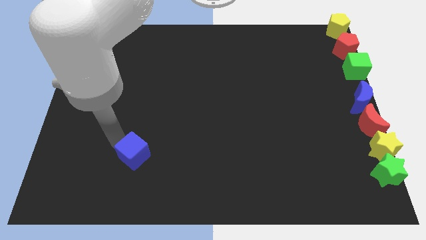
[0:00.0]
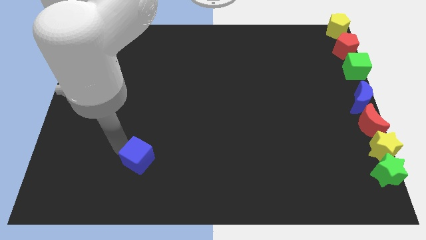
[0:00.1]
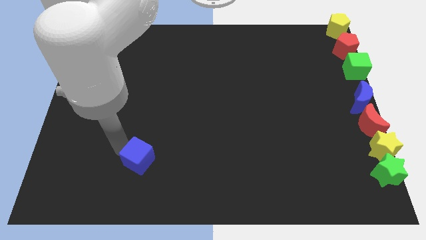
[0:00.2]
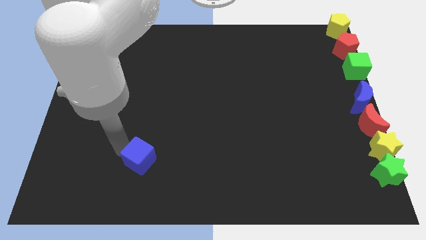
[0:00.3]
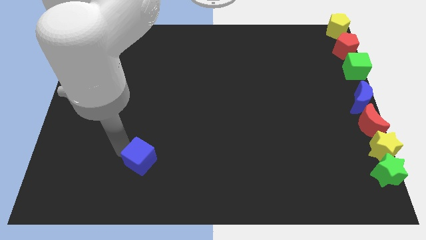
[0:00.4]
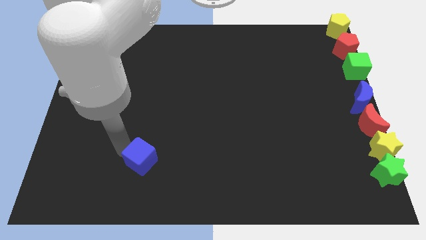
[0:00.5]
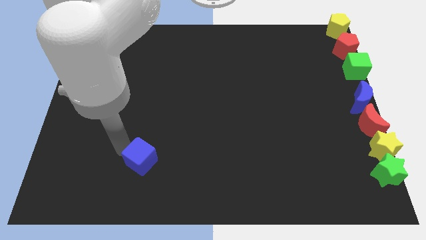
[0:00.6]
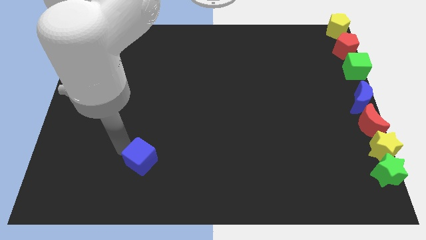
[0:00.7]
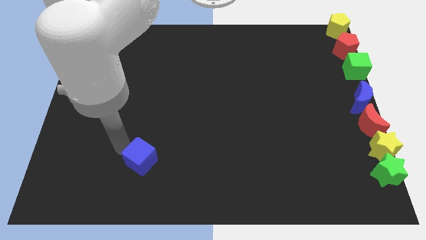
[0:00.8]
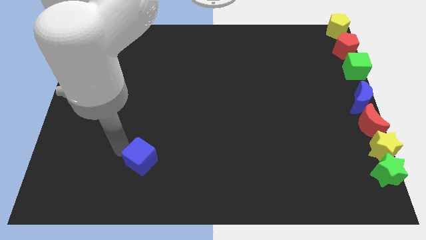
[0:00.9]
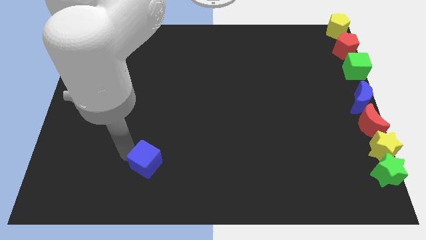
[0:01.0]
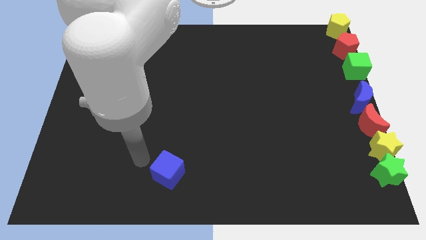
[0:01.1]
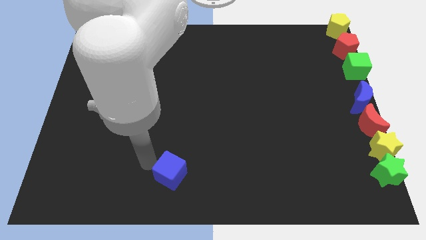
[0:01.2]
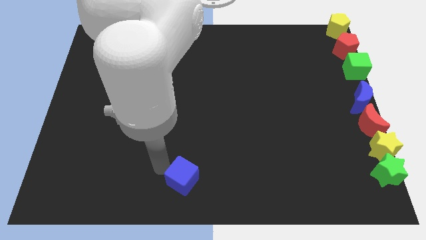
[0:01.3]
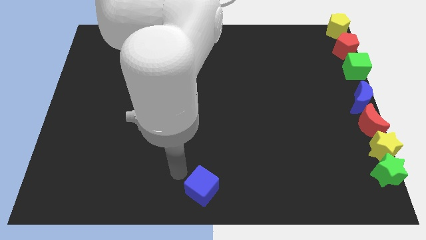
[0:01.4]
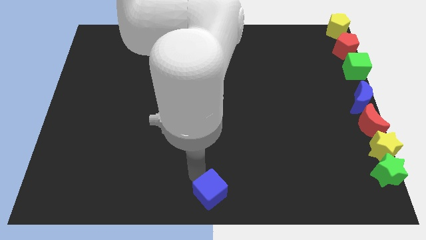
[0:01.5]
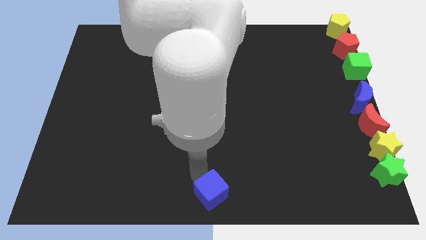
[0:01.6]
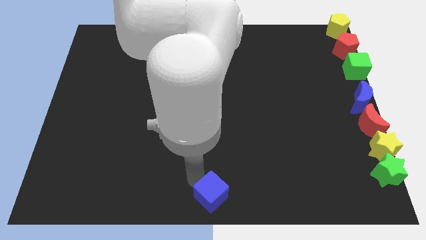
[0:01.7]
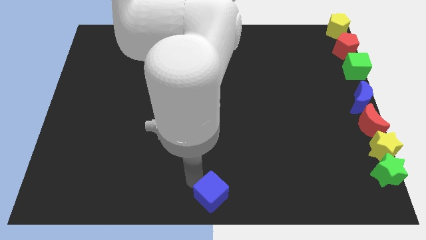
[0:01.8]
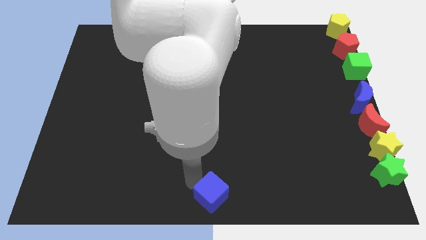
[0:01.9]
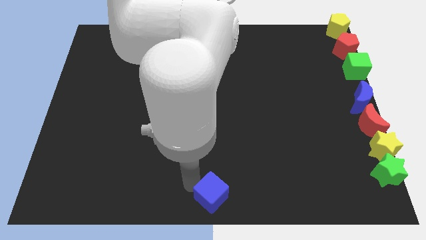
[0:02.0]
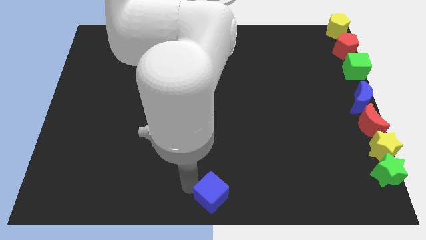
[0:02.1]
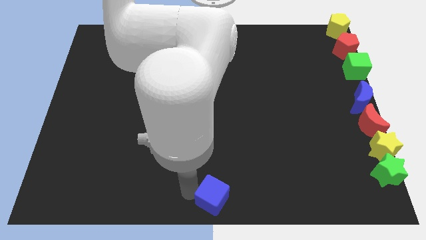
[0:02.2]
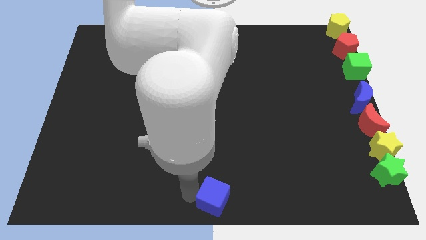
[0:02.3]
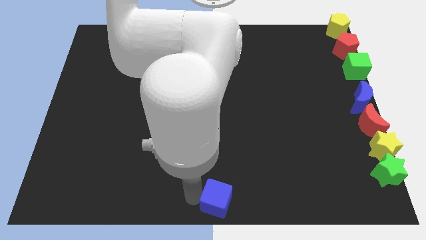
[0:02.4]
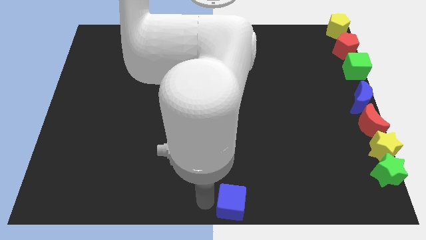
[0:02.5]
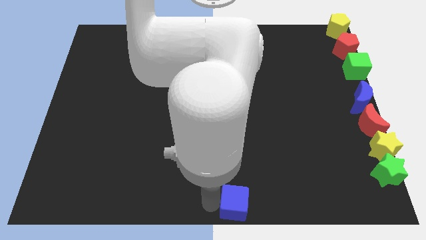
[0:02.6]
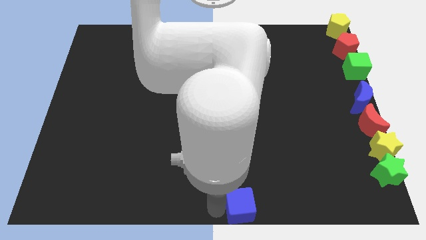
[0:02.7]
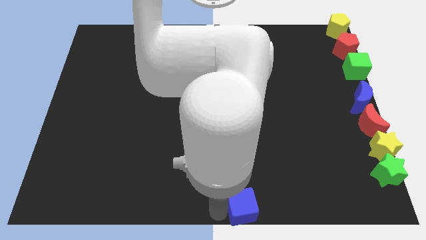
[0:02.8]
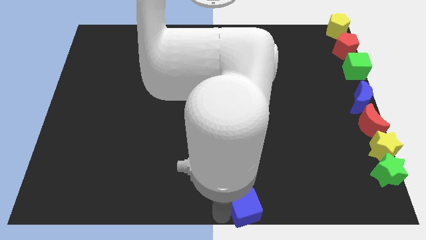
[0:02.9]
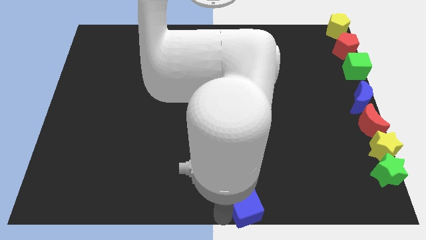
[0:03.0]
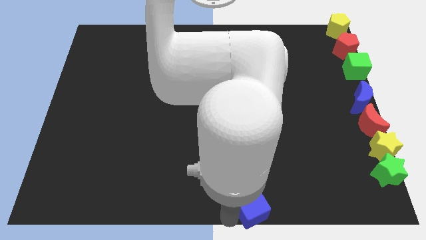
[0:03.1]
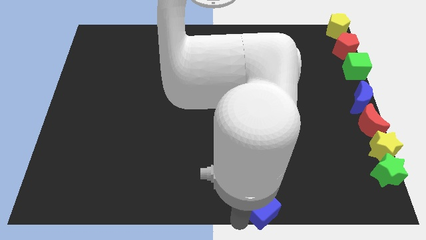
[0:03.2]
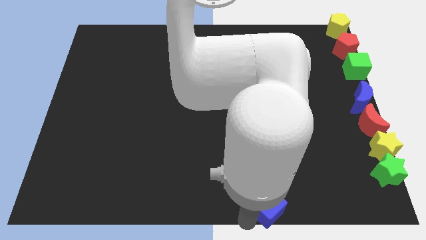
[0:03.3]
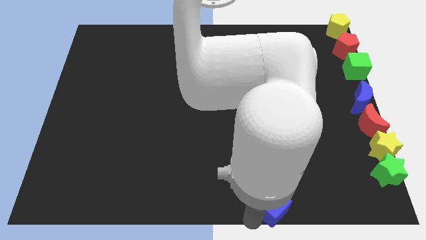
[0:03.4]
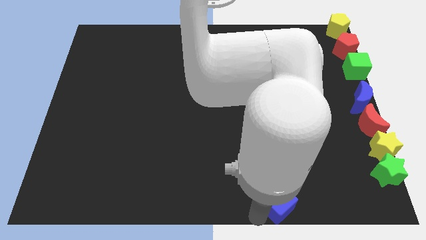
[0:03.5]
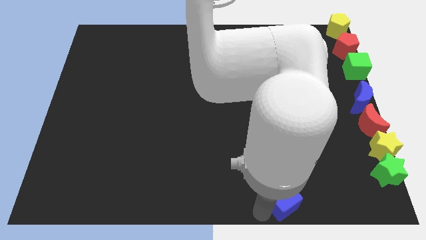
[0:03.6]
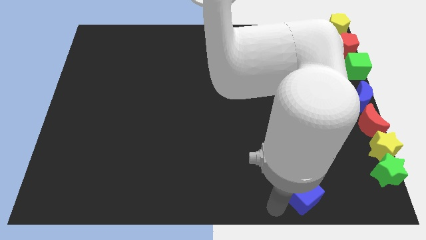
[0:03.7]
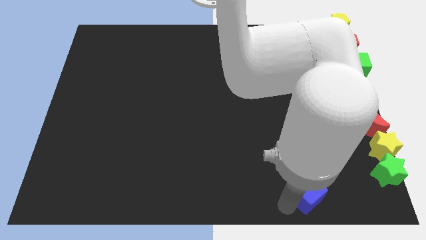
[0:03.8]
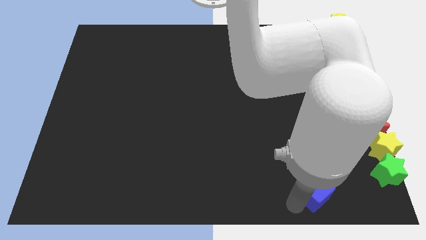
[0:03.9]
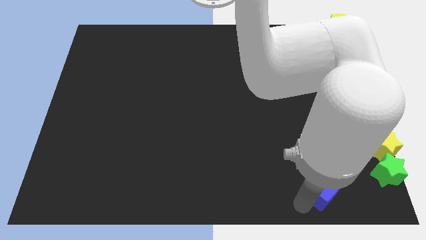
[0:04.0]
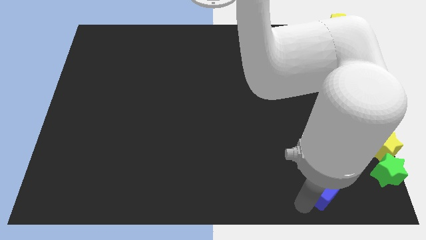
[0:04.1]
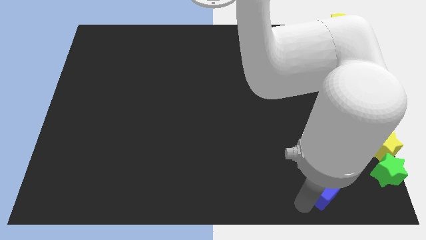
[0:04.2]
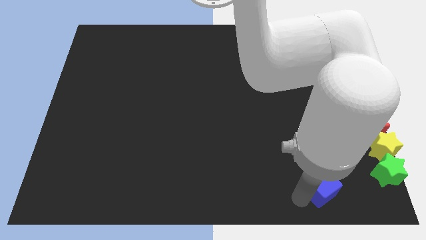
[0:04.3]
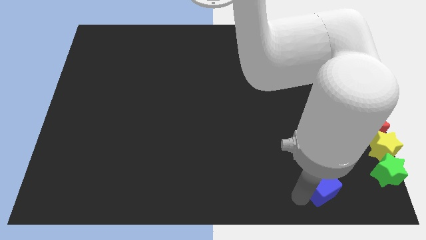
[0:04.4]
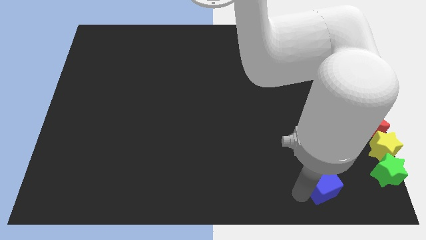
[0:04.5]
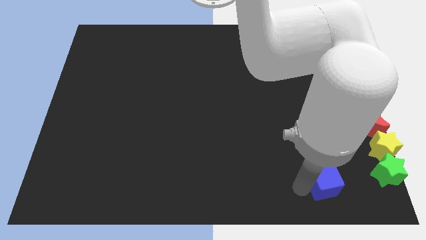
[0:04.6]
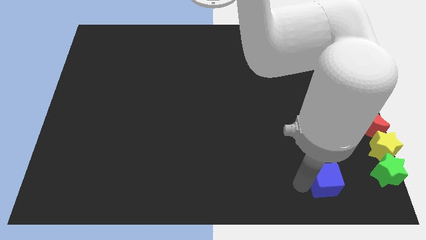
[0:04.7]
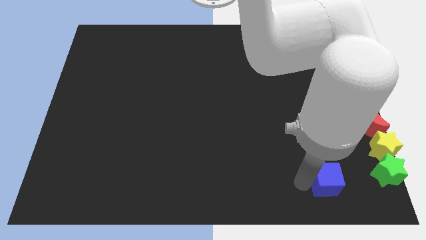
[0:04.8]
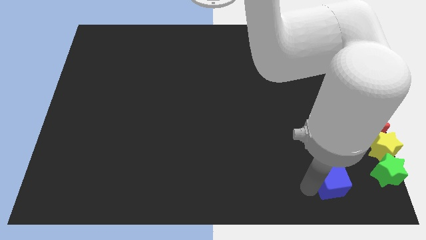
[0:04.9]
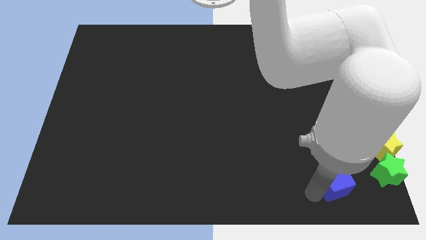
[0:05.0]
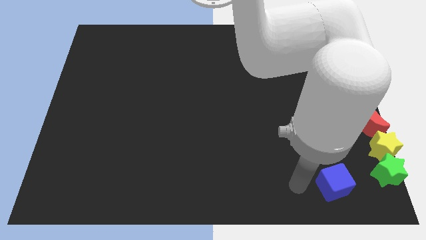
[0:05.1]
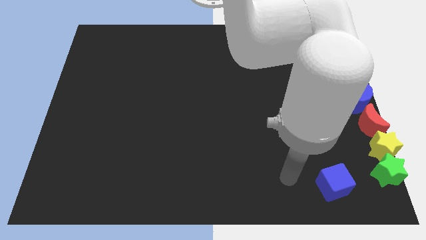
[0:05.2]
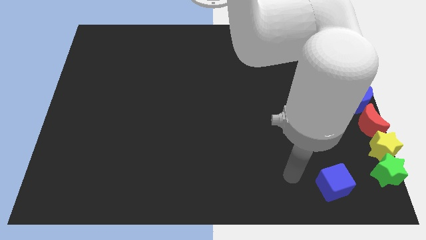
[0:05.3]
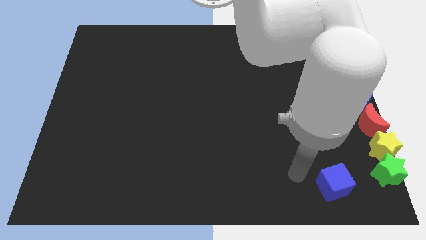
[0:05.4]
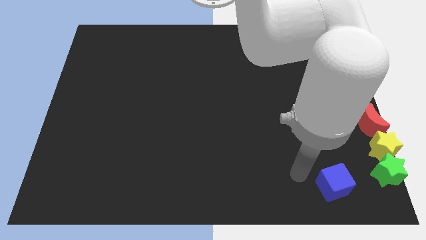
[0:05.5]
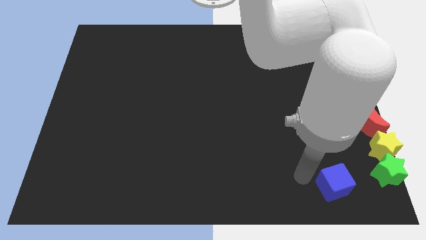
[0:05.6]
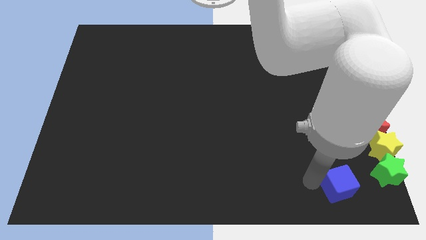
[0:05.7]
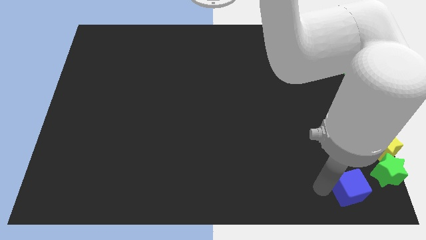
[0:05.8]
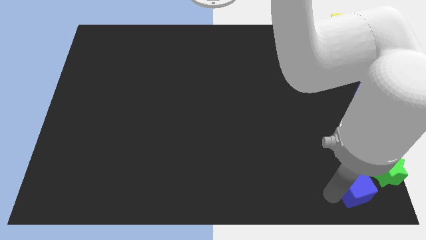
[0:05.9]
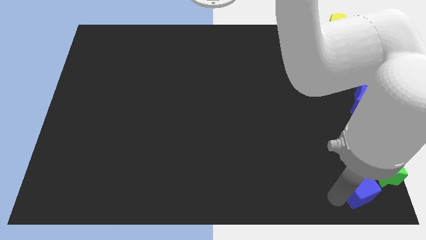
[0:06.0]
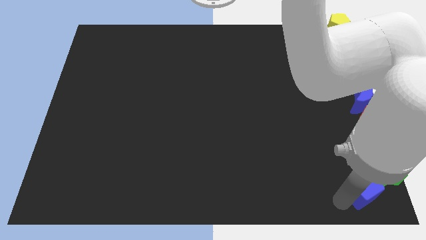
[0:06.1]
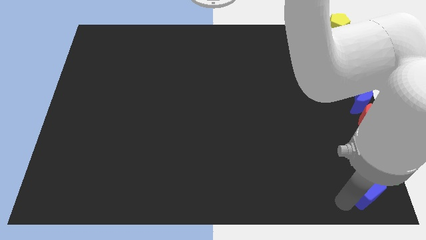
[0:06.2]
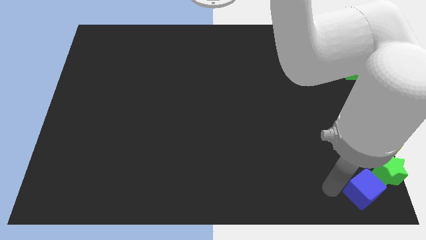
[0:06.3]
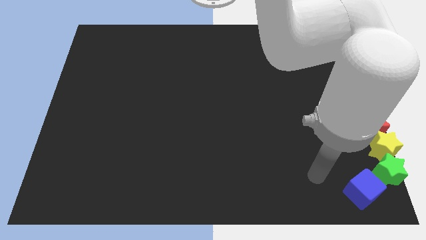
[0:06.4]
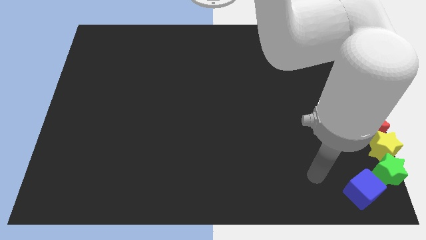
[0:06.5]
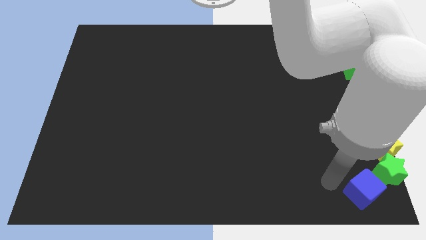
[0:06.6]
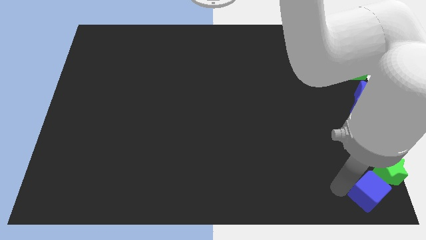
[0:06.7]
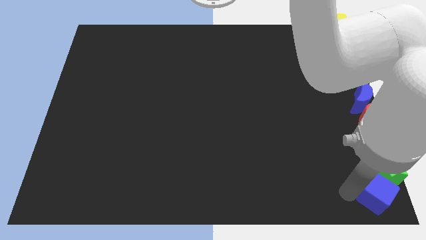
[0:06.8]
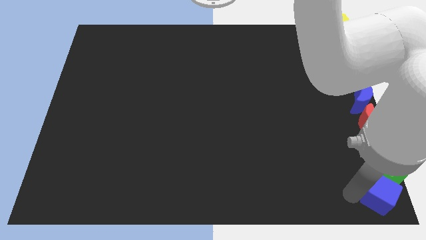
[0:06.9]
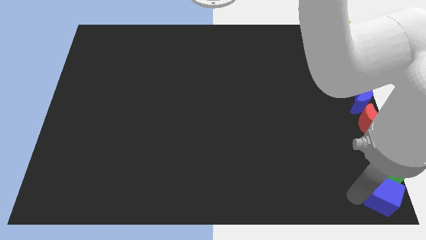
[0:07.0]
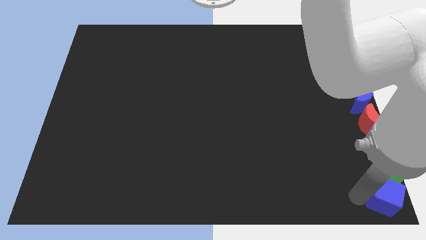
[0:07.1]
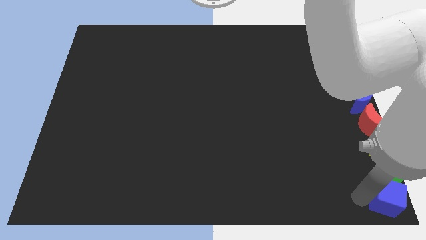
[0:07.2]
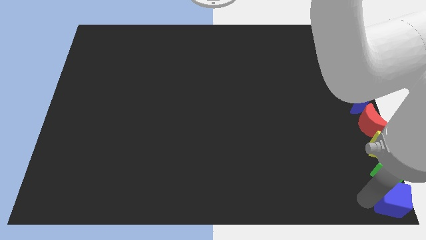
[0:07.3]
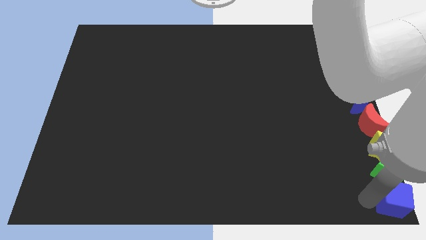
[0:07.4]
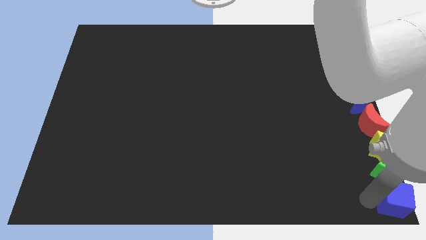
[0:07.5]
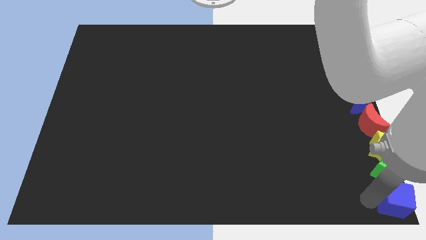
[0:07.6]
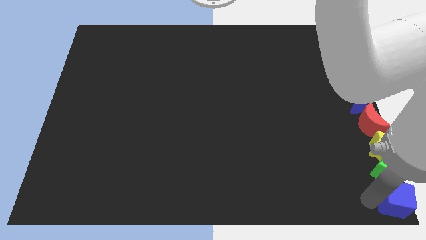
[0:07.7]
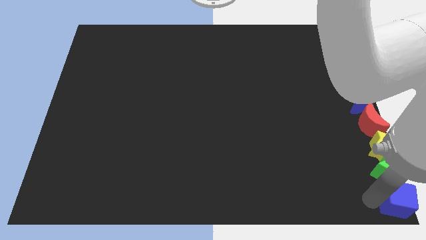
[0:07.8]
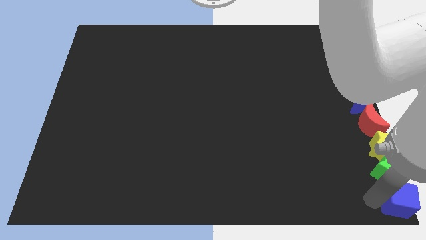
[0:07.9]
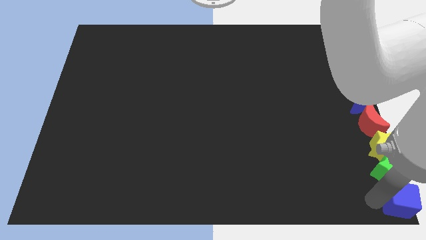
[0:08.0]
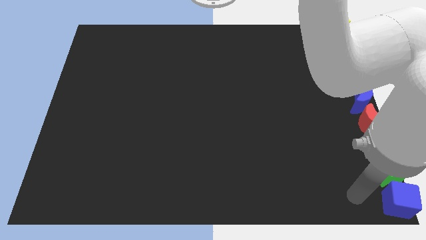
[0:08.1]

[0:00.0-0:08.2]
push the blue cube to the bottom right of the board

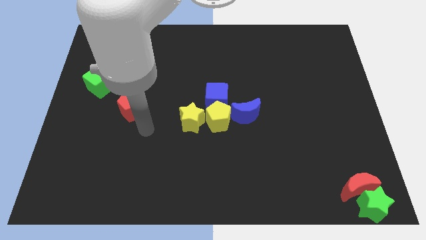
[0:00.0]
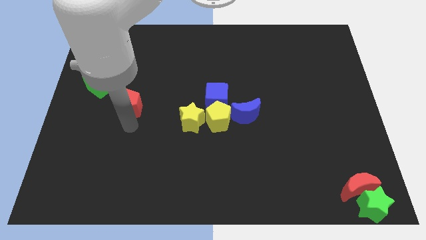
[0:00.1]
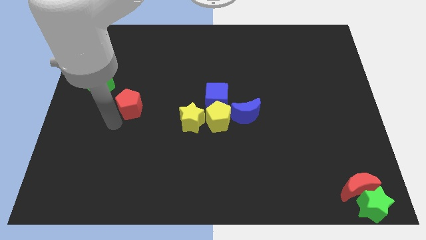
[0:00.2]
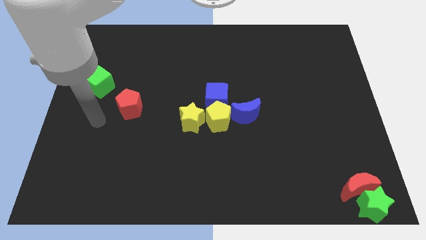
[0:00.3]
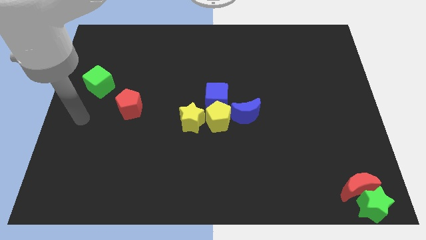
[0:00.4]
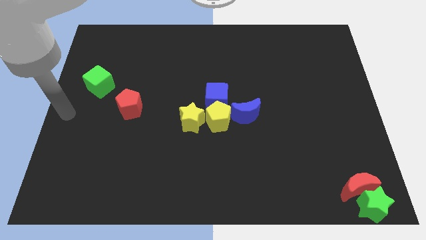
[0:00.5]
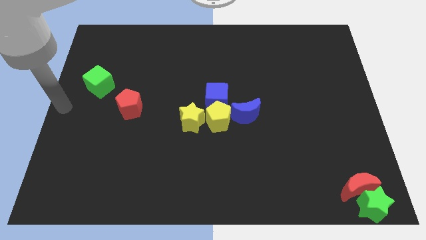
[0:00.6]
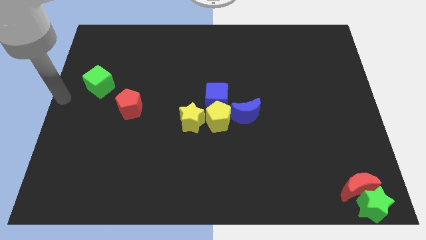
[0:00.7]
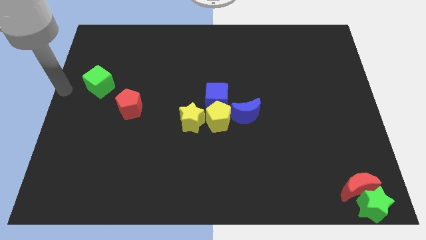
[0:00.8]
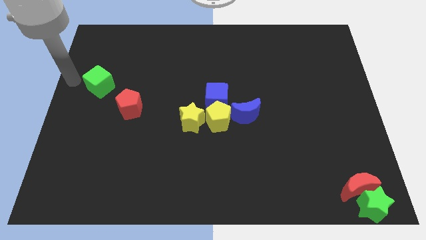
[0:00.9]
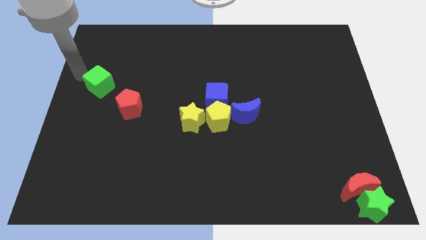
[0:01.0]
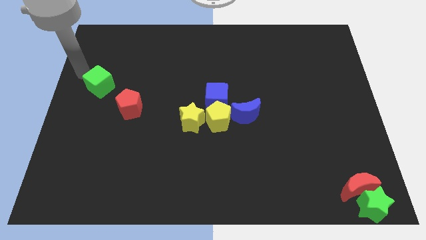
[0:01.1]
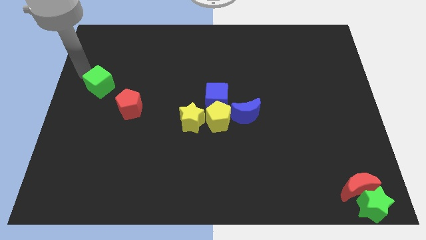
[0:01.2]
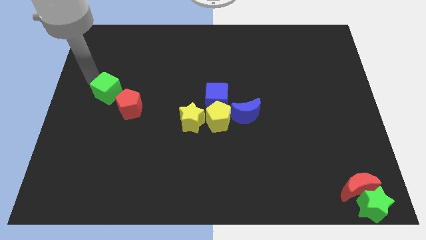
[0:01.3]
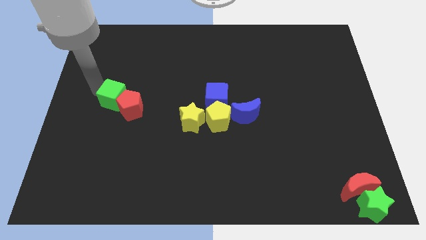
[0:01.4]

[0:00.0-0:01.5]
put the green cube and red pentagon together
